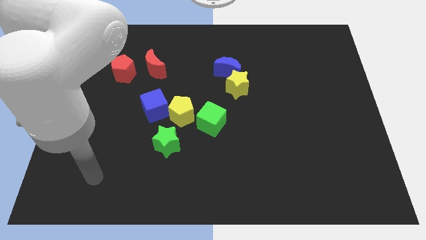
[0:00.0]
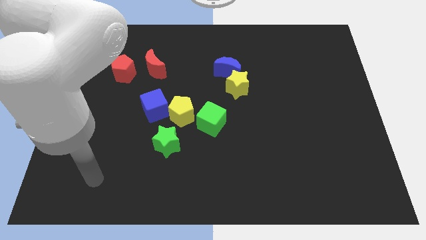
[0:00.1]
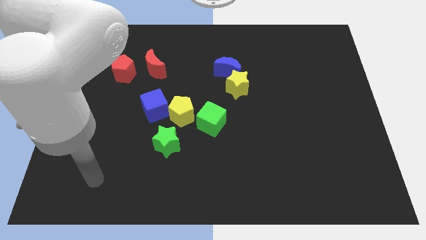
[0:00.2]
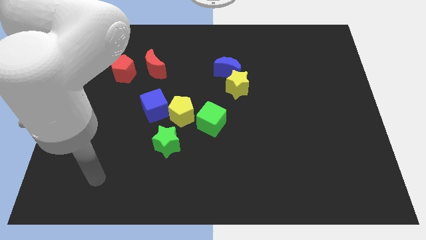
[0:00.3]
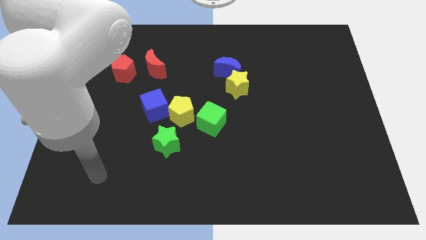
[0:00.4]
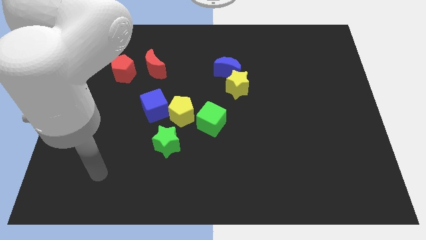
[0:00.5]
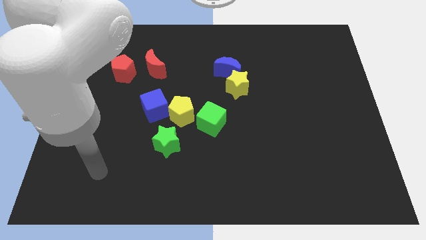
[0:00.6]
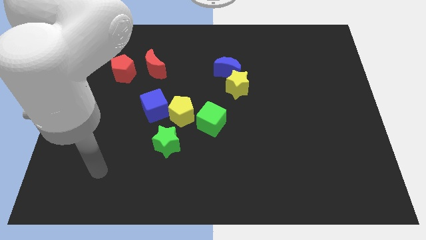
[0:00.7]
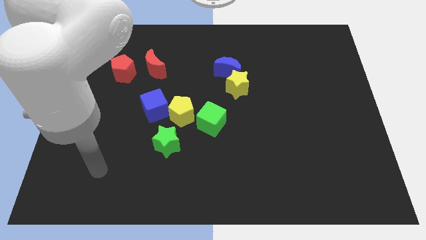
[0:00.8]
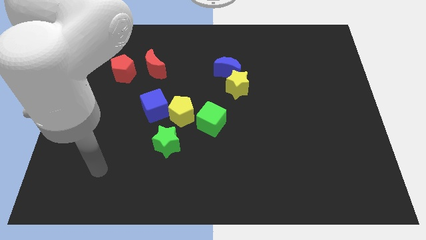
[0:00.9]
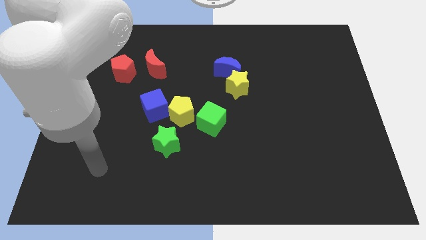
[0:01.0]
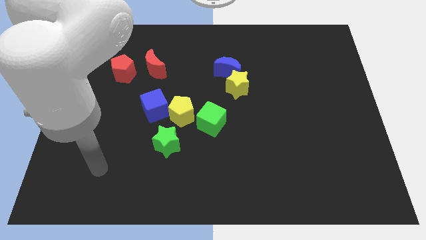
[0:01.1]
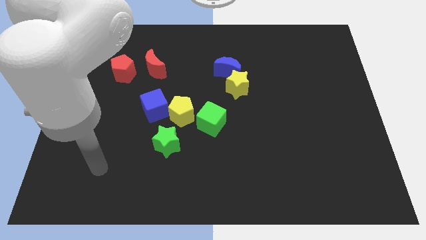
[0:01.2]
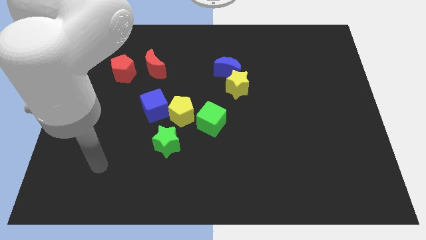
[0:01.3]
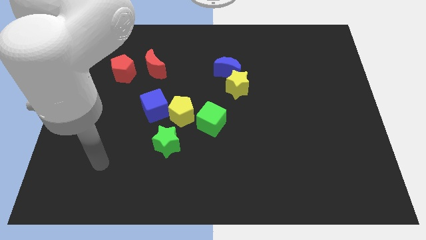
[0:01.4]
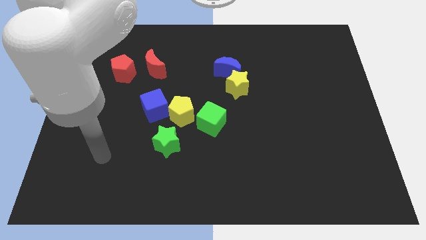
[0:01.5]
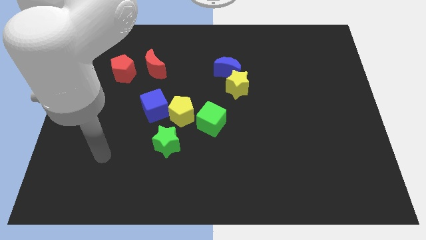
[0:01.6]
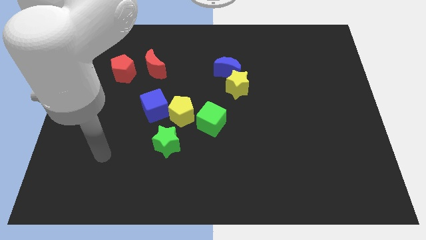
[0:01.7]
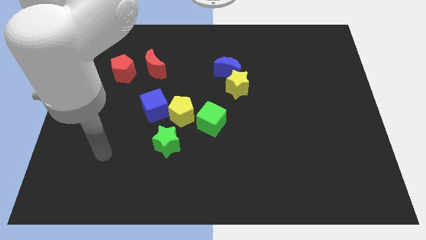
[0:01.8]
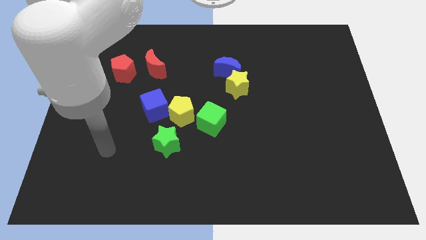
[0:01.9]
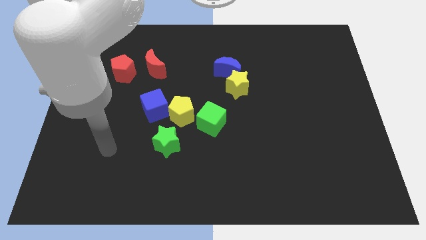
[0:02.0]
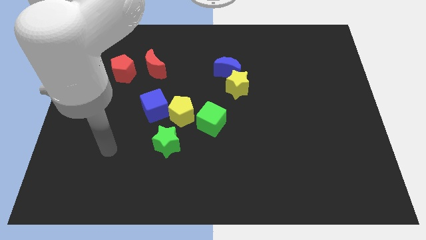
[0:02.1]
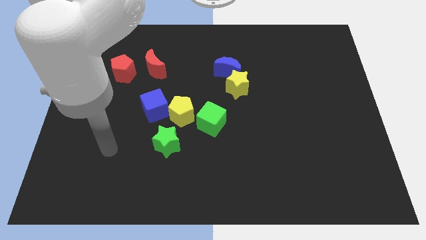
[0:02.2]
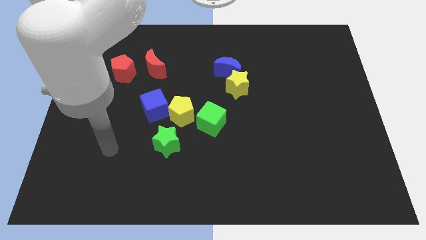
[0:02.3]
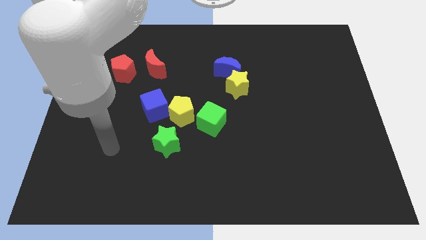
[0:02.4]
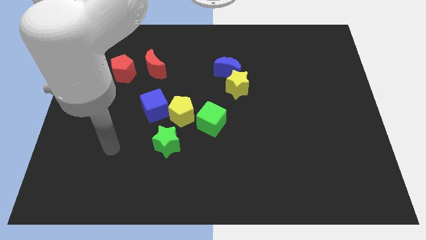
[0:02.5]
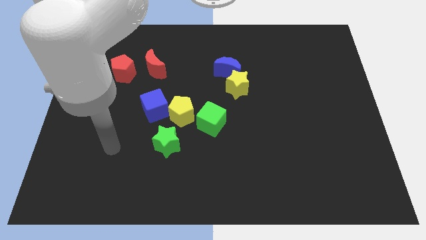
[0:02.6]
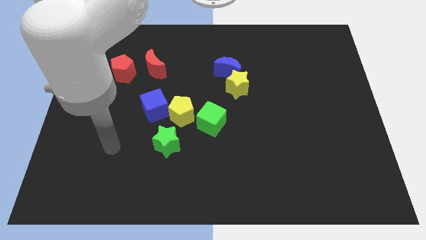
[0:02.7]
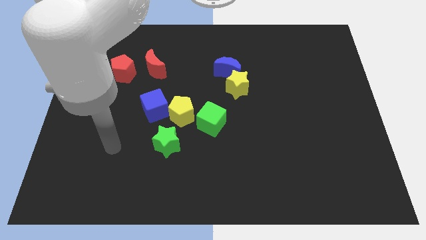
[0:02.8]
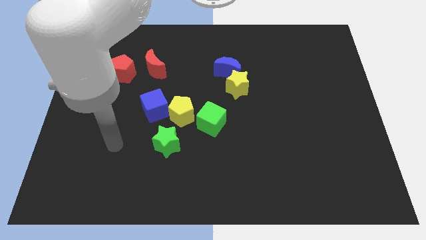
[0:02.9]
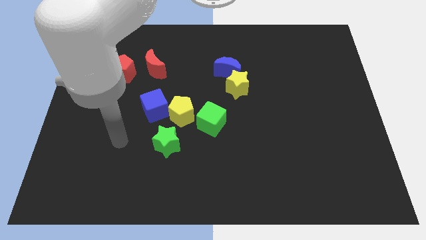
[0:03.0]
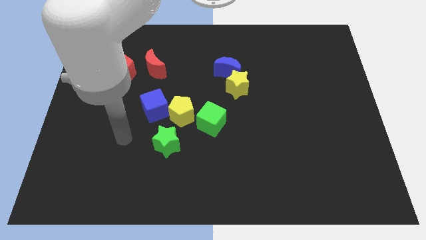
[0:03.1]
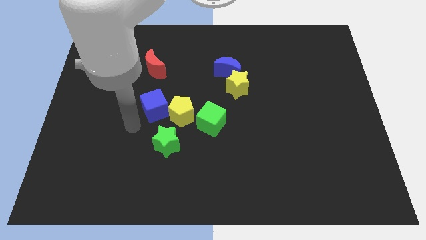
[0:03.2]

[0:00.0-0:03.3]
move your arm close to the blue cube

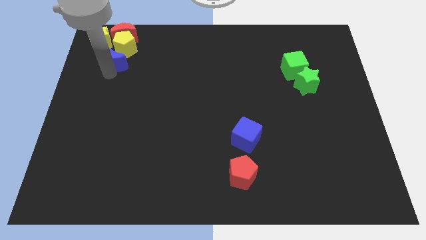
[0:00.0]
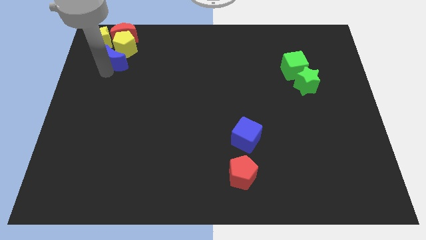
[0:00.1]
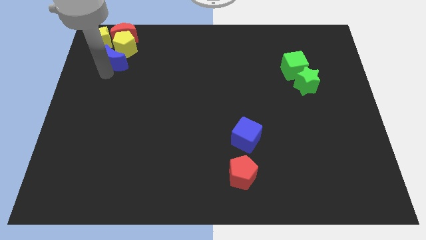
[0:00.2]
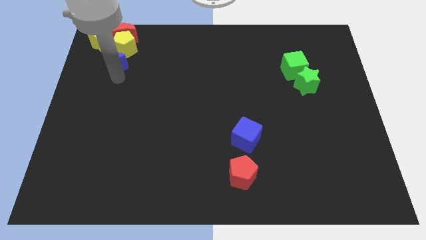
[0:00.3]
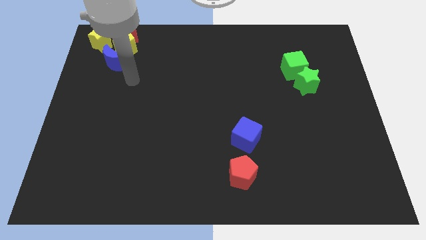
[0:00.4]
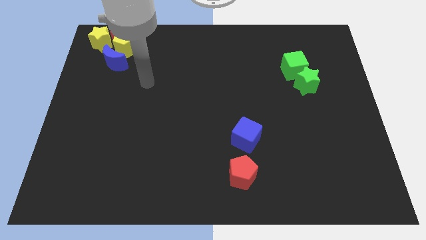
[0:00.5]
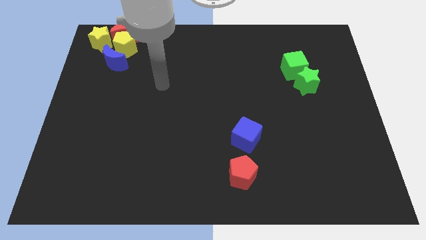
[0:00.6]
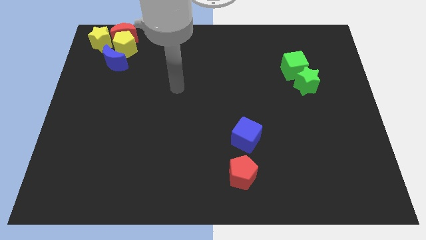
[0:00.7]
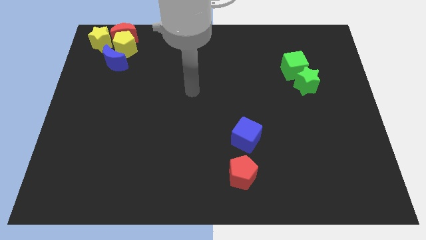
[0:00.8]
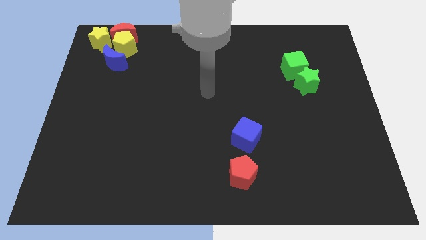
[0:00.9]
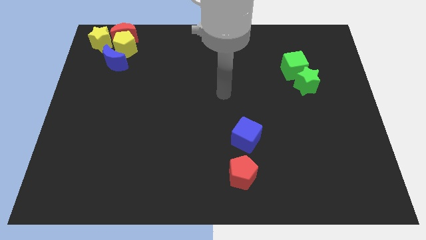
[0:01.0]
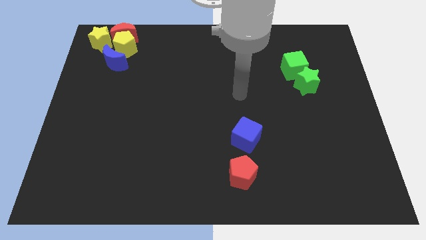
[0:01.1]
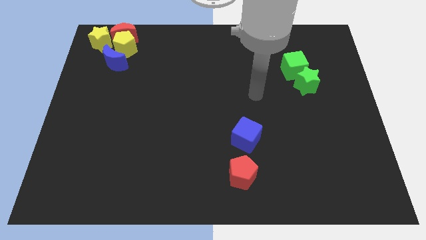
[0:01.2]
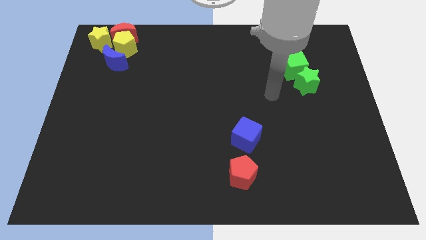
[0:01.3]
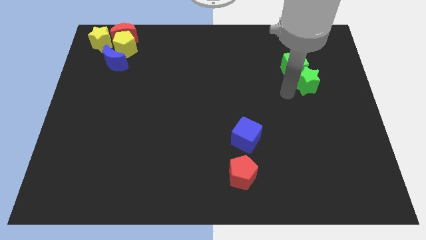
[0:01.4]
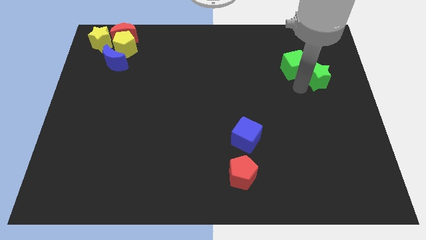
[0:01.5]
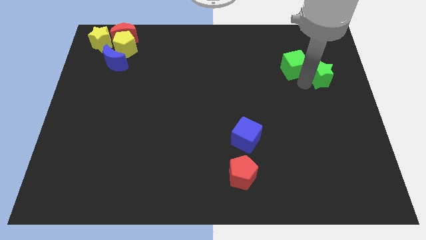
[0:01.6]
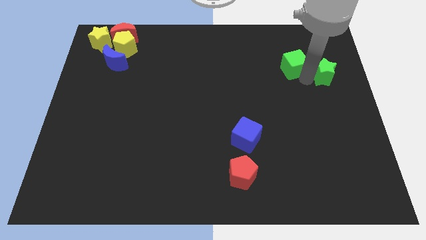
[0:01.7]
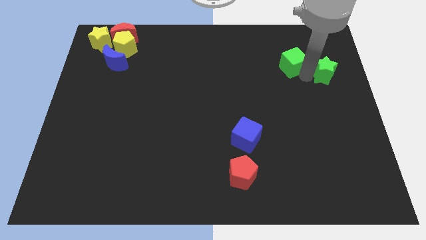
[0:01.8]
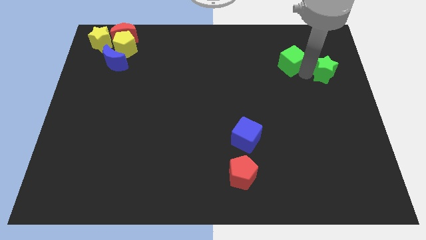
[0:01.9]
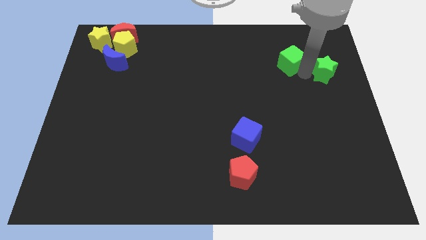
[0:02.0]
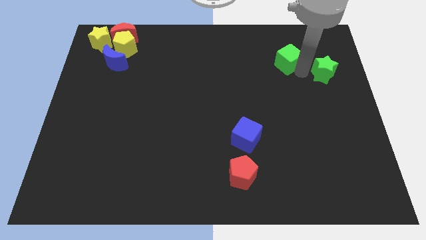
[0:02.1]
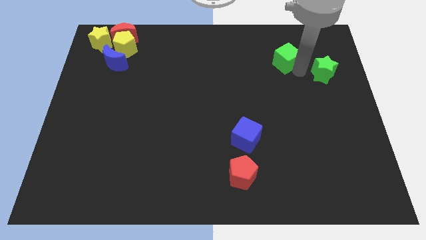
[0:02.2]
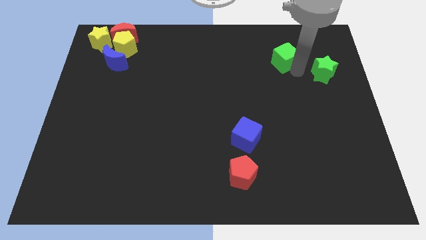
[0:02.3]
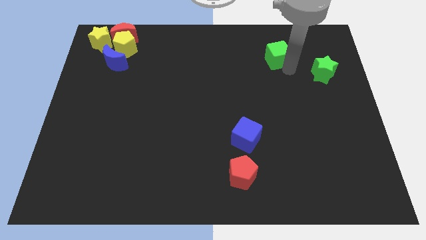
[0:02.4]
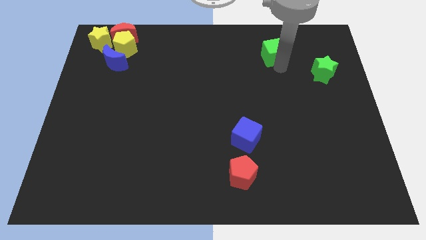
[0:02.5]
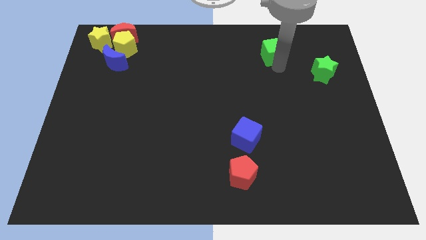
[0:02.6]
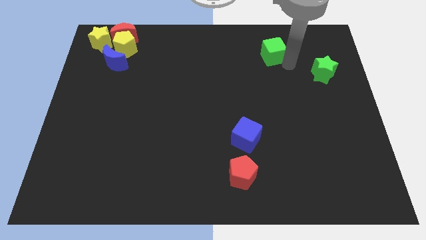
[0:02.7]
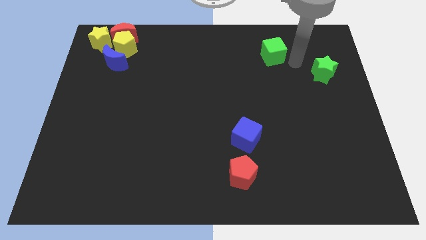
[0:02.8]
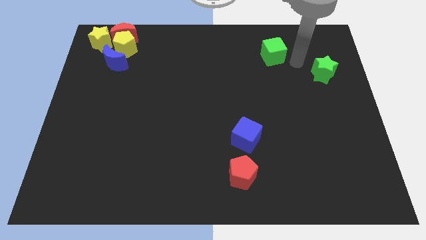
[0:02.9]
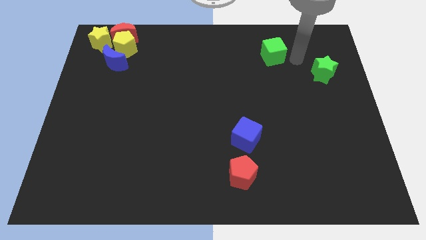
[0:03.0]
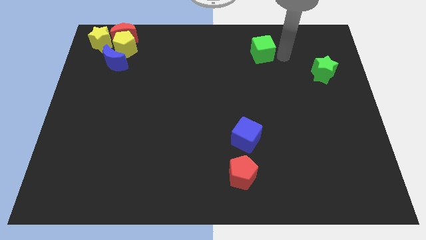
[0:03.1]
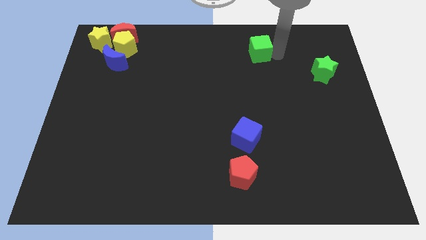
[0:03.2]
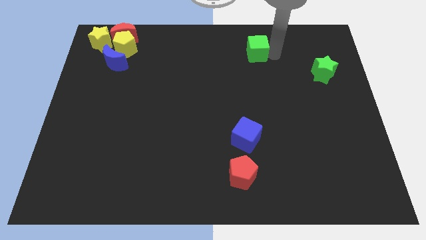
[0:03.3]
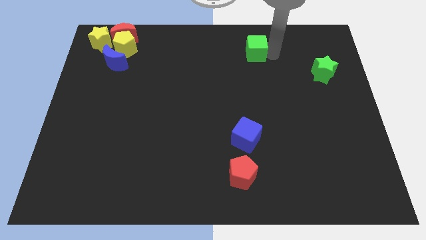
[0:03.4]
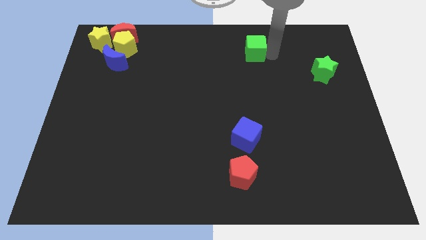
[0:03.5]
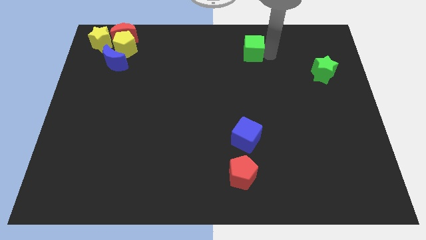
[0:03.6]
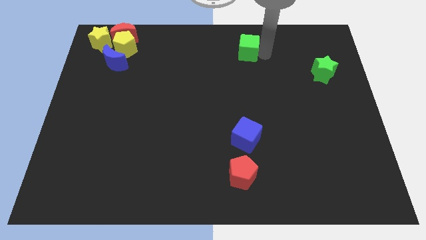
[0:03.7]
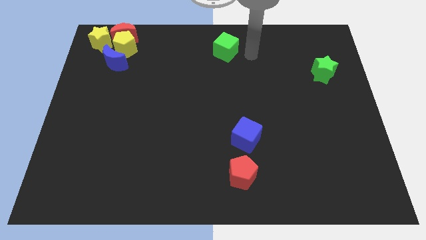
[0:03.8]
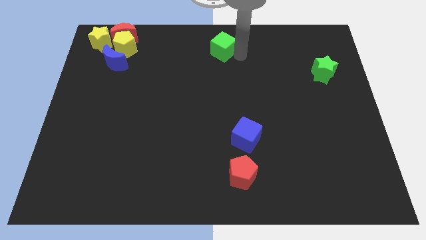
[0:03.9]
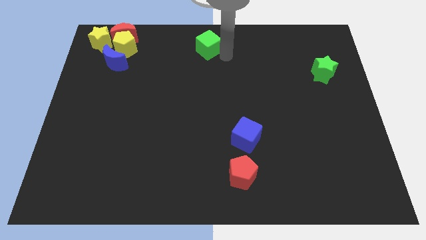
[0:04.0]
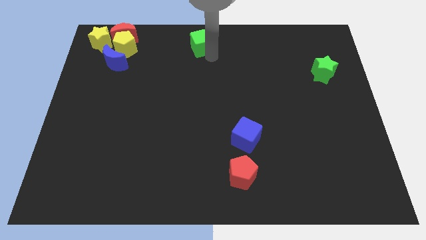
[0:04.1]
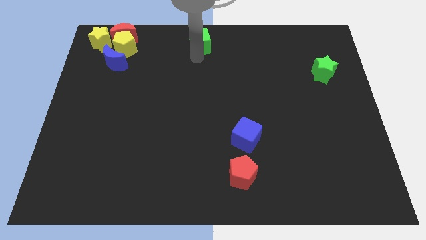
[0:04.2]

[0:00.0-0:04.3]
separate the green cube from the green star

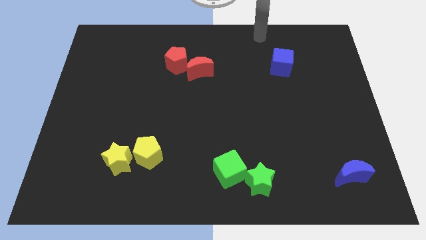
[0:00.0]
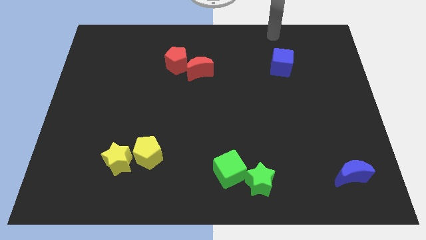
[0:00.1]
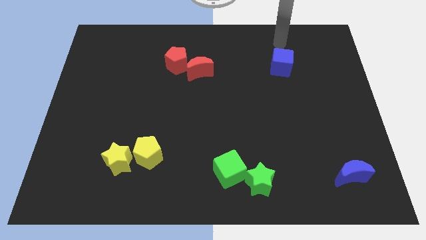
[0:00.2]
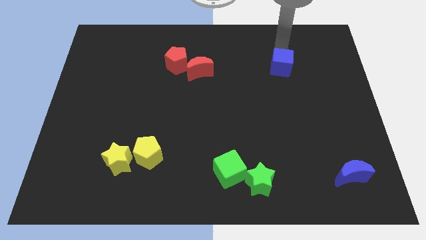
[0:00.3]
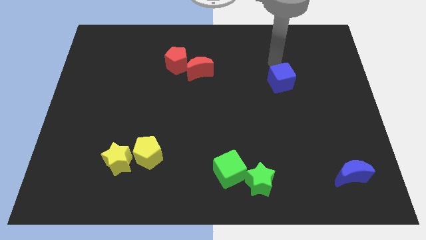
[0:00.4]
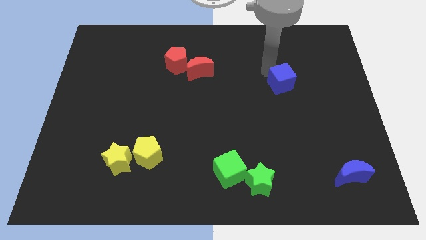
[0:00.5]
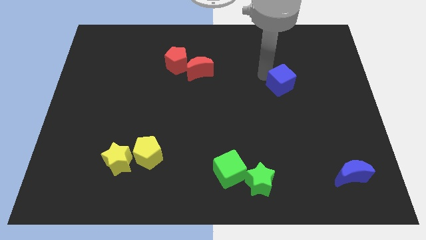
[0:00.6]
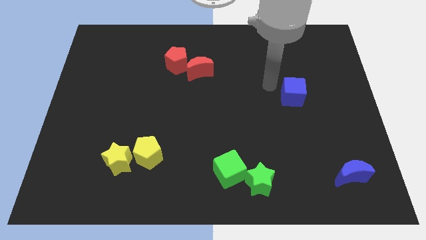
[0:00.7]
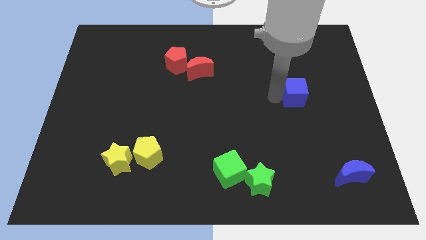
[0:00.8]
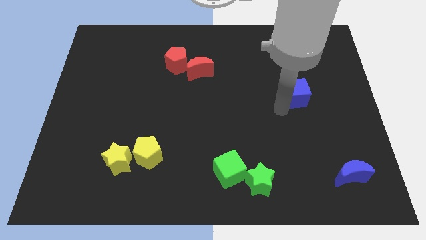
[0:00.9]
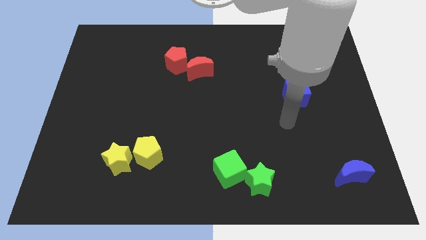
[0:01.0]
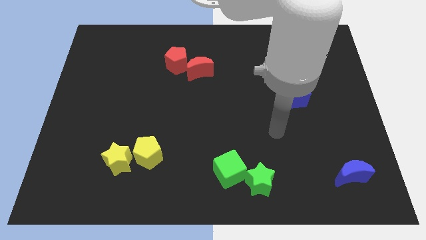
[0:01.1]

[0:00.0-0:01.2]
push the blue cube towards the center right of the board

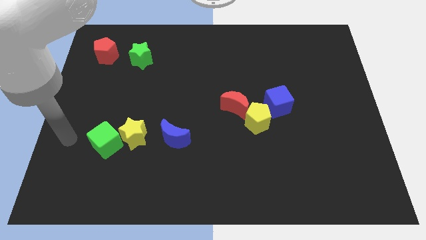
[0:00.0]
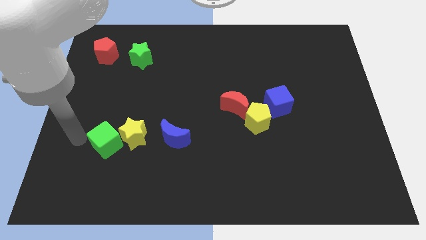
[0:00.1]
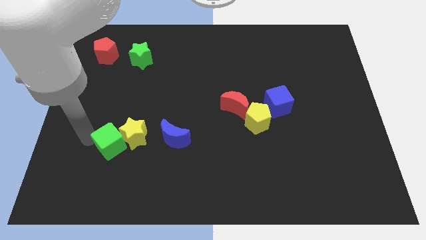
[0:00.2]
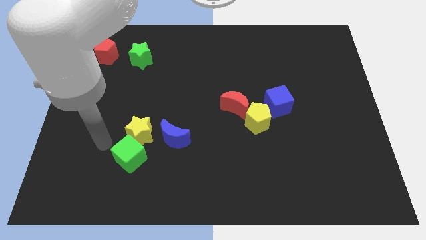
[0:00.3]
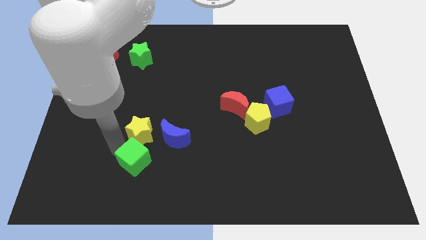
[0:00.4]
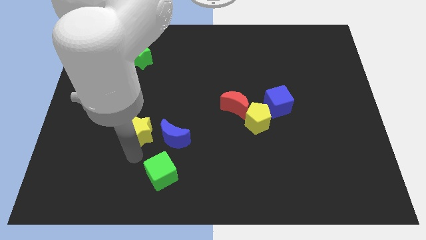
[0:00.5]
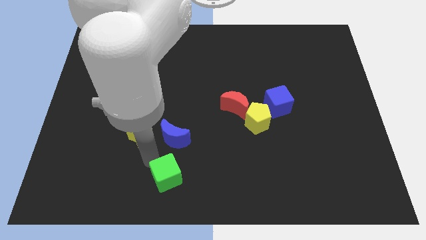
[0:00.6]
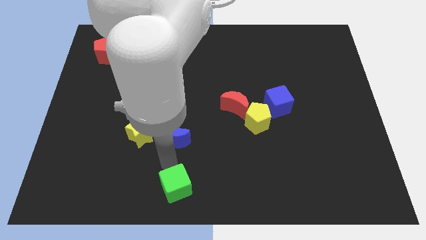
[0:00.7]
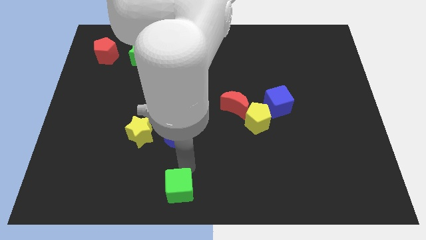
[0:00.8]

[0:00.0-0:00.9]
separate green cube from yellow star
